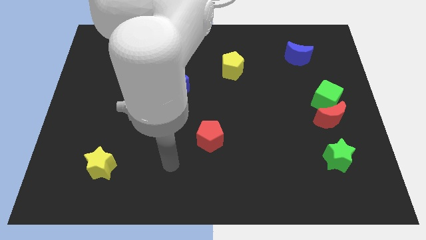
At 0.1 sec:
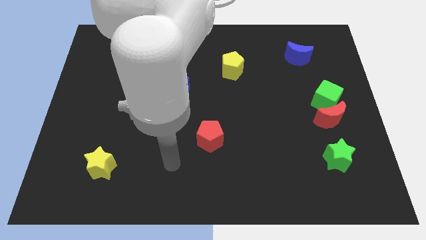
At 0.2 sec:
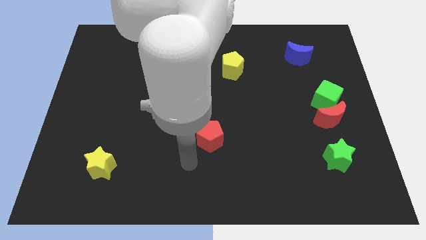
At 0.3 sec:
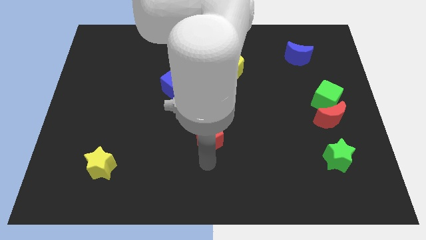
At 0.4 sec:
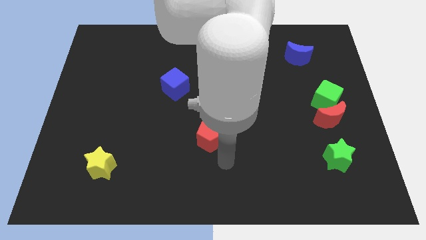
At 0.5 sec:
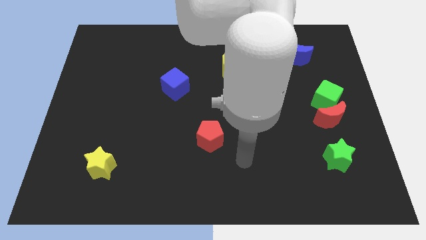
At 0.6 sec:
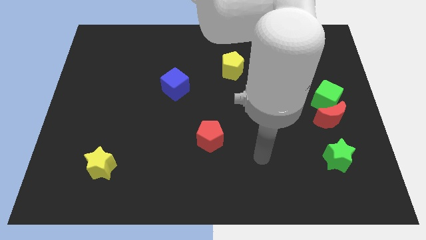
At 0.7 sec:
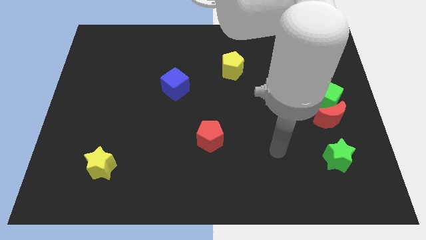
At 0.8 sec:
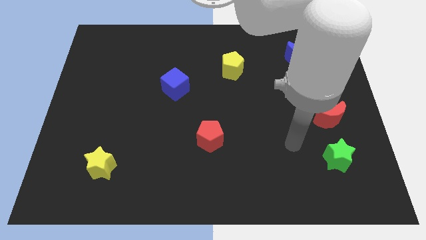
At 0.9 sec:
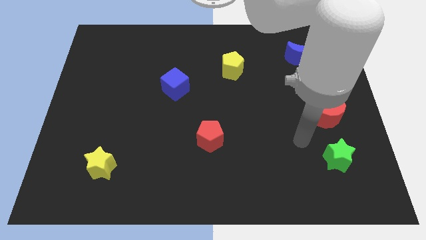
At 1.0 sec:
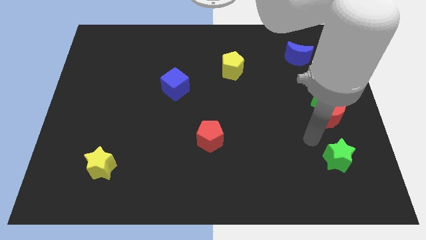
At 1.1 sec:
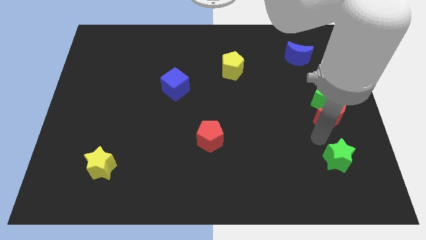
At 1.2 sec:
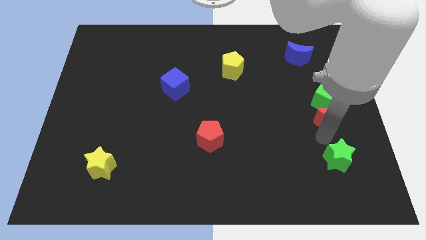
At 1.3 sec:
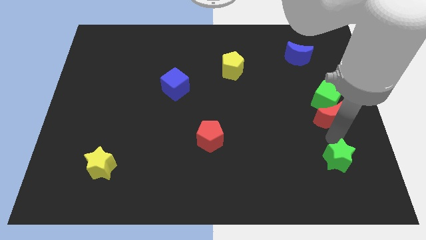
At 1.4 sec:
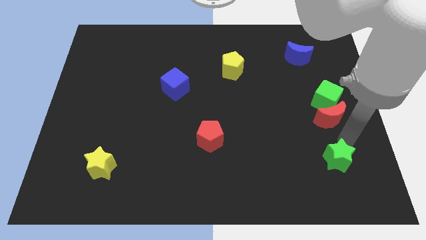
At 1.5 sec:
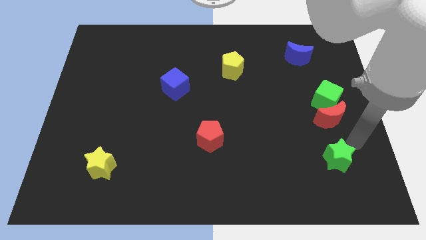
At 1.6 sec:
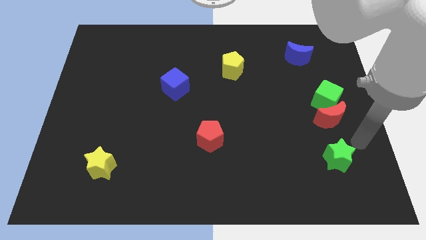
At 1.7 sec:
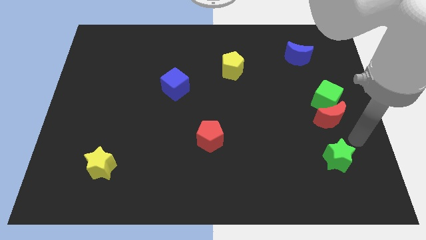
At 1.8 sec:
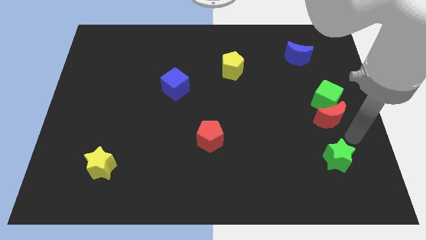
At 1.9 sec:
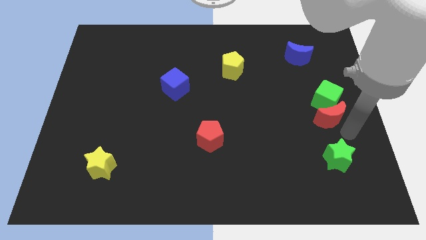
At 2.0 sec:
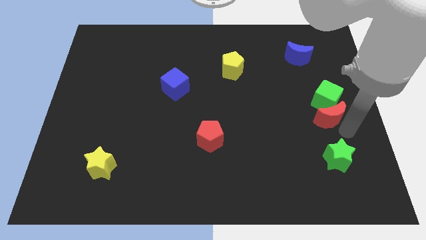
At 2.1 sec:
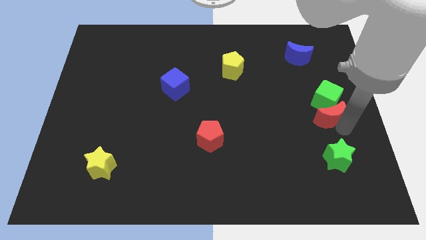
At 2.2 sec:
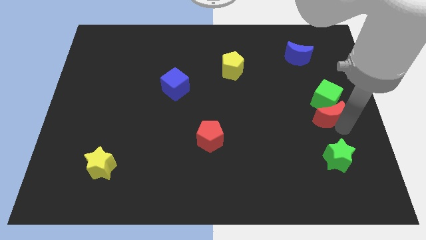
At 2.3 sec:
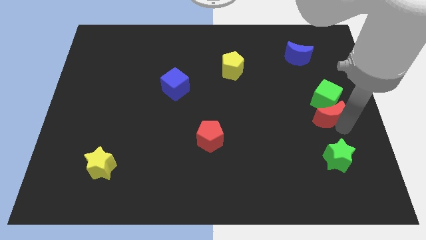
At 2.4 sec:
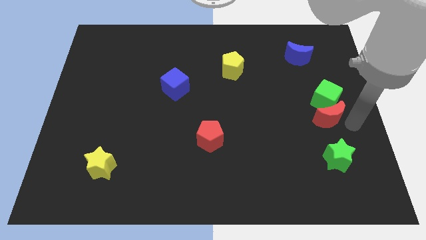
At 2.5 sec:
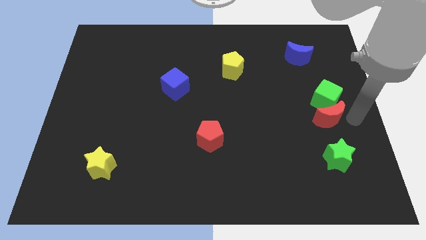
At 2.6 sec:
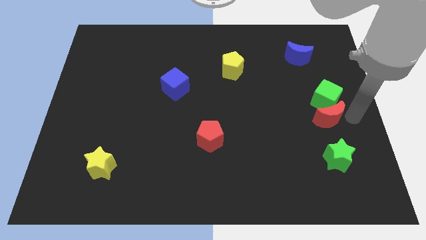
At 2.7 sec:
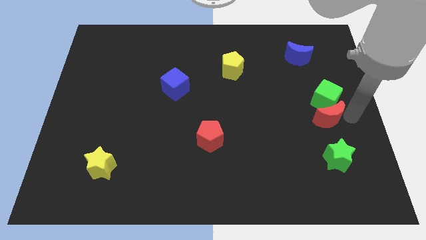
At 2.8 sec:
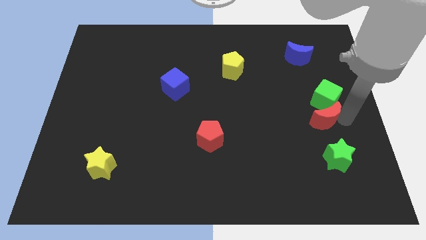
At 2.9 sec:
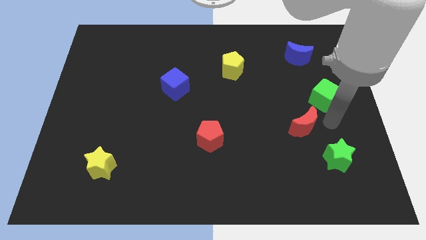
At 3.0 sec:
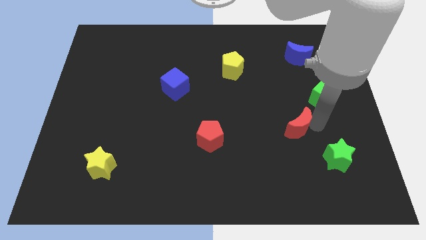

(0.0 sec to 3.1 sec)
go and separate the red crescent from the green cube

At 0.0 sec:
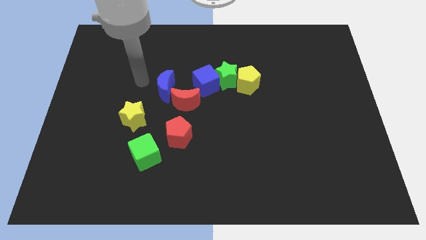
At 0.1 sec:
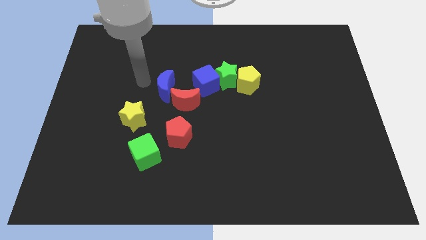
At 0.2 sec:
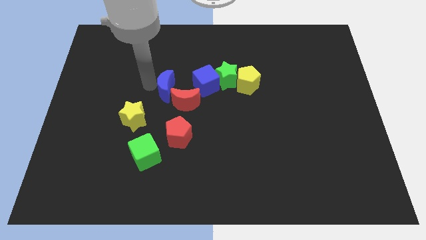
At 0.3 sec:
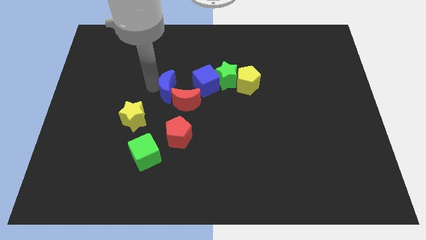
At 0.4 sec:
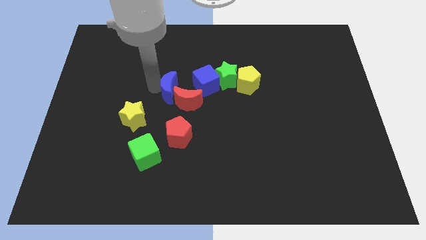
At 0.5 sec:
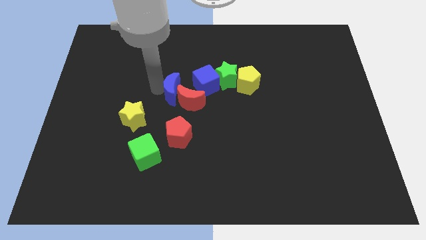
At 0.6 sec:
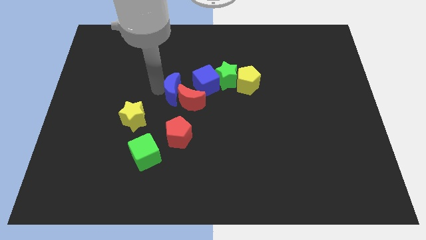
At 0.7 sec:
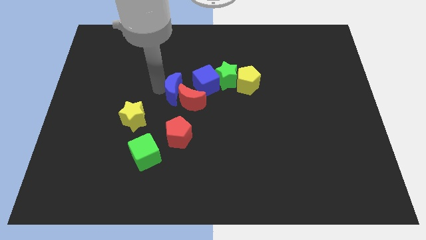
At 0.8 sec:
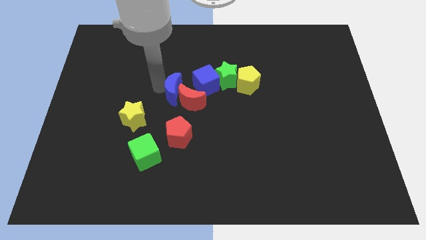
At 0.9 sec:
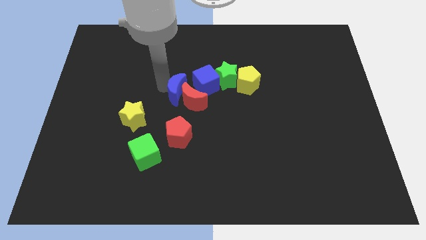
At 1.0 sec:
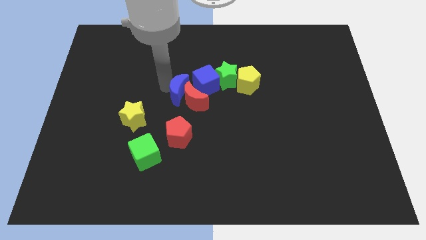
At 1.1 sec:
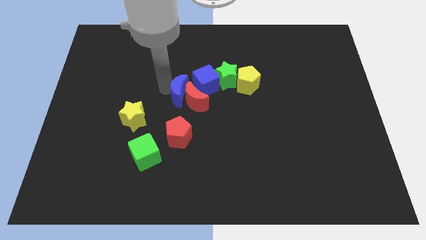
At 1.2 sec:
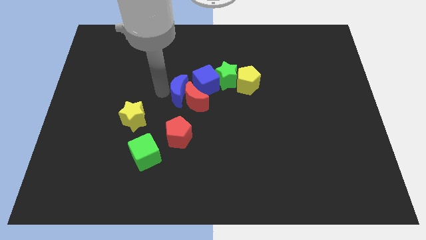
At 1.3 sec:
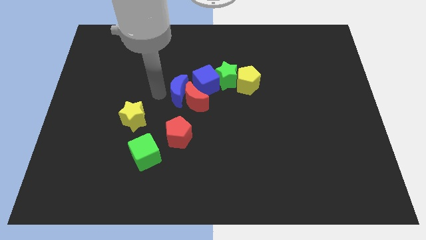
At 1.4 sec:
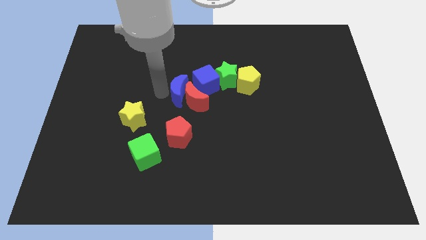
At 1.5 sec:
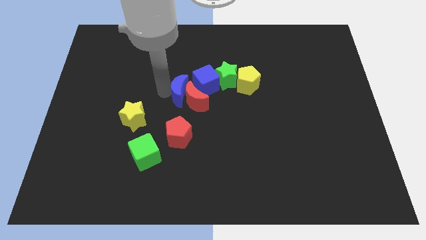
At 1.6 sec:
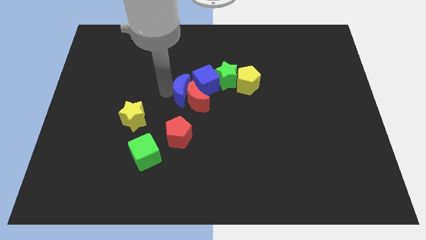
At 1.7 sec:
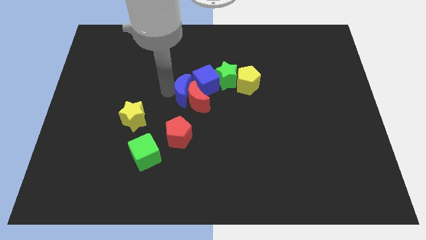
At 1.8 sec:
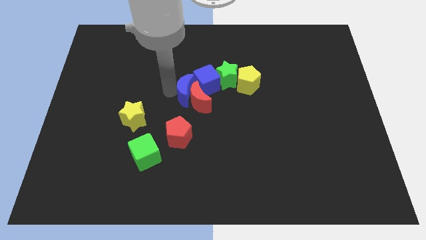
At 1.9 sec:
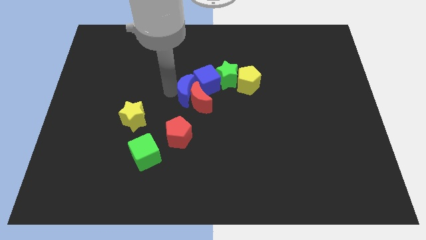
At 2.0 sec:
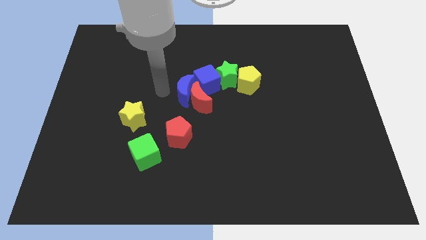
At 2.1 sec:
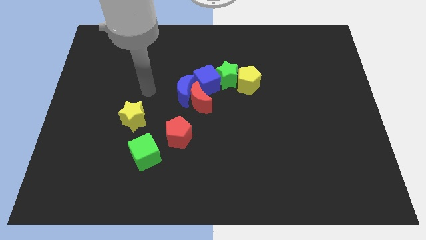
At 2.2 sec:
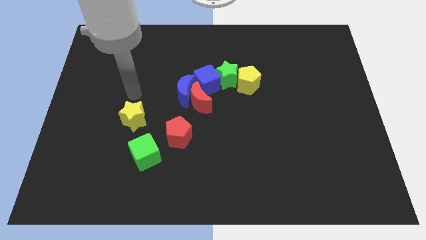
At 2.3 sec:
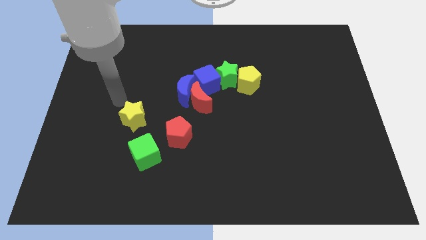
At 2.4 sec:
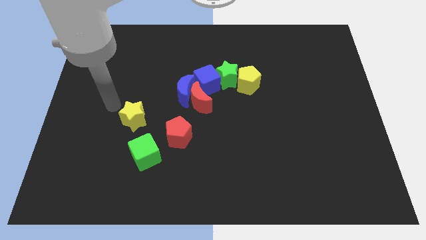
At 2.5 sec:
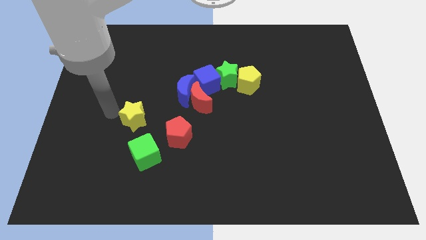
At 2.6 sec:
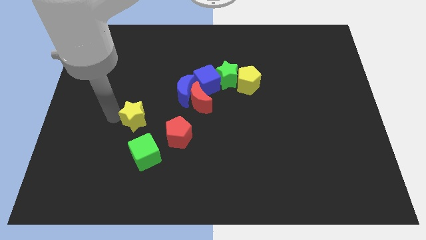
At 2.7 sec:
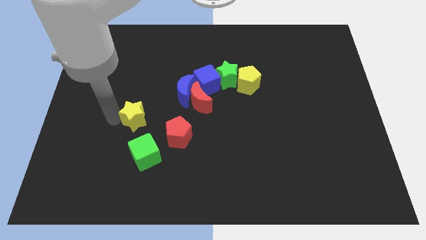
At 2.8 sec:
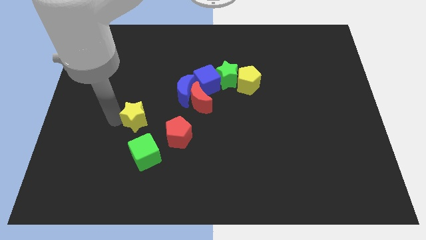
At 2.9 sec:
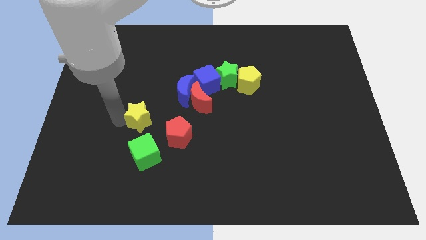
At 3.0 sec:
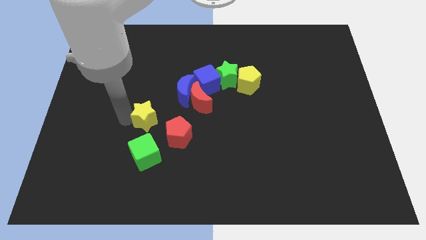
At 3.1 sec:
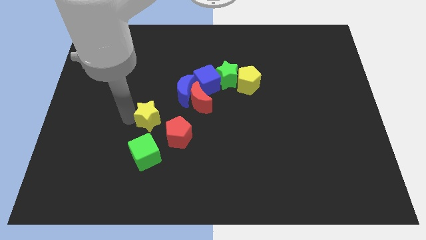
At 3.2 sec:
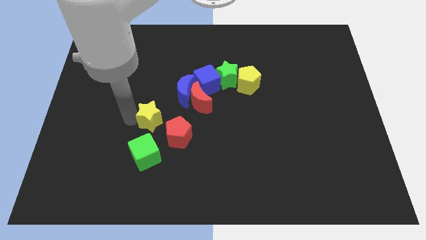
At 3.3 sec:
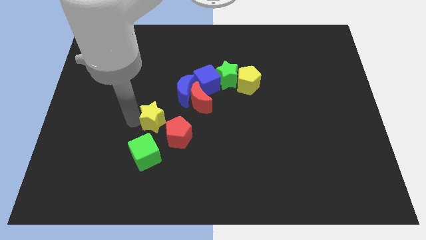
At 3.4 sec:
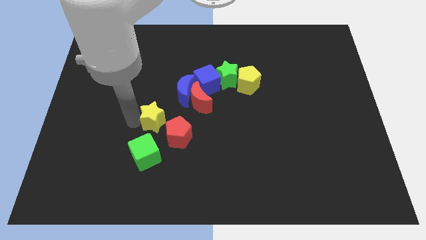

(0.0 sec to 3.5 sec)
move the yellow star above the green cube

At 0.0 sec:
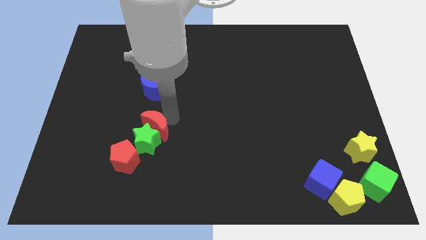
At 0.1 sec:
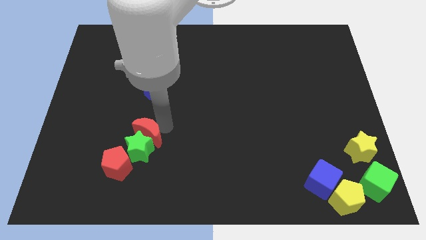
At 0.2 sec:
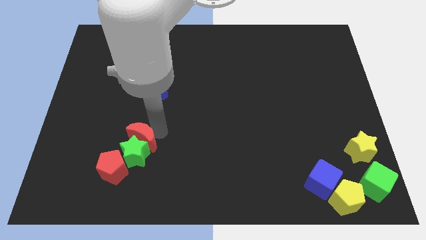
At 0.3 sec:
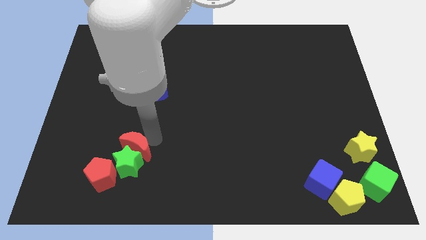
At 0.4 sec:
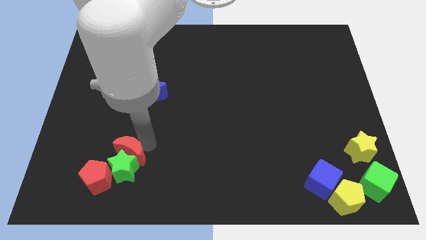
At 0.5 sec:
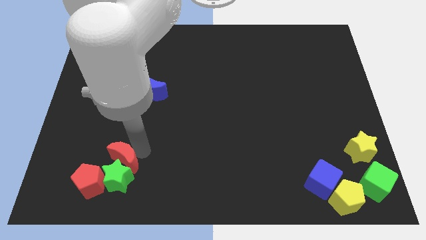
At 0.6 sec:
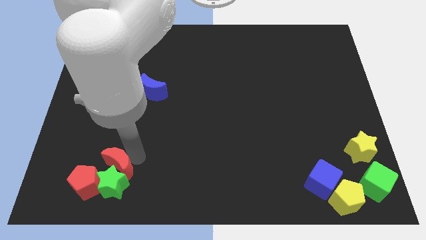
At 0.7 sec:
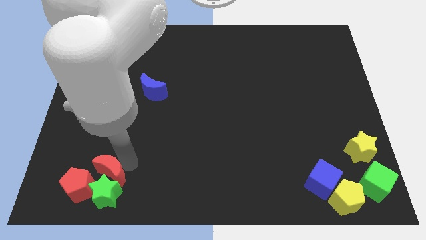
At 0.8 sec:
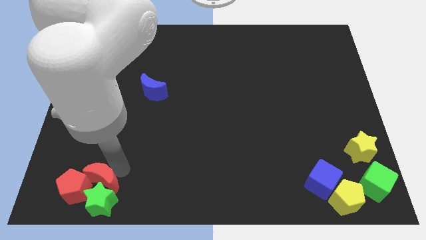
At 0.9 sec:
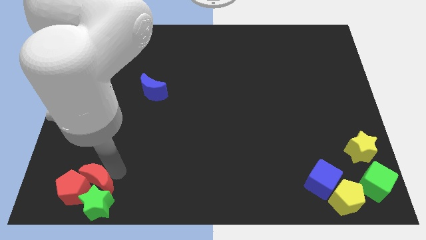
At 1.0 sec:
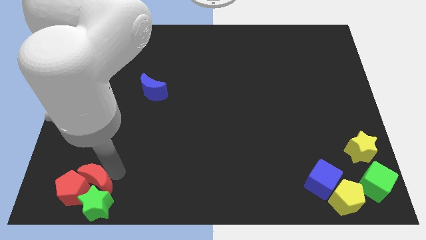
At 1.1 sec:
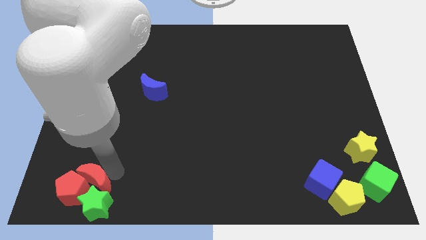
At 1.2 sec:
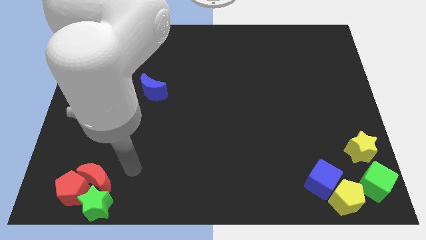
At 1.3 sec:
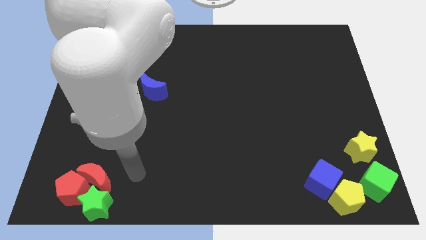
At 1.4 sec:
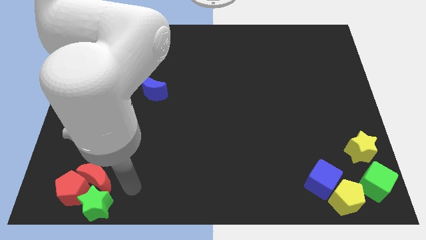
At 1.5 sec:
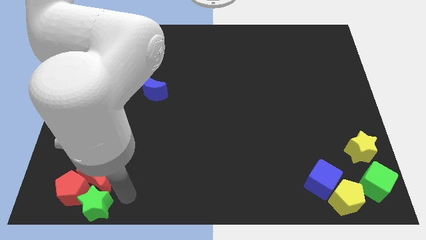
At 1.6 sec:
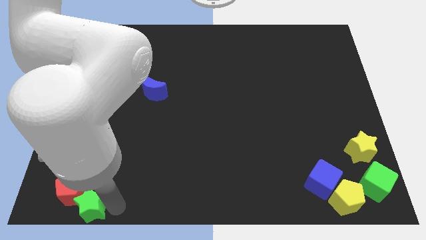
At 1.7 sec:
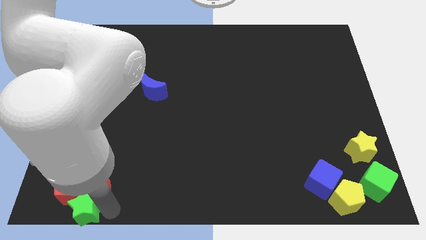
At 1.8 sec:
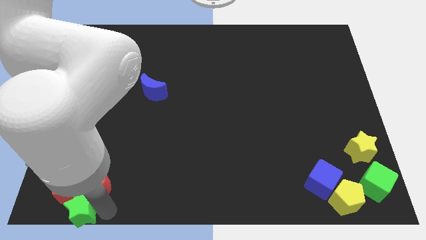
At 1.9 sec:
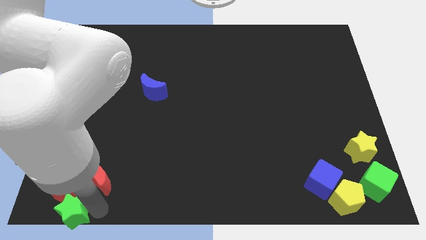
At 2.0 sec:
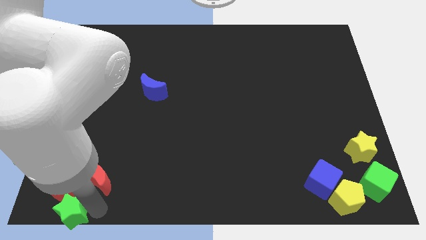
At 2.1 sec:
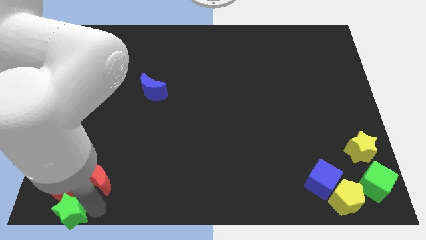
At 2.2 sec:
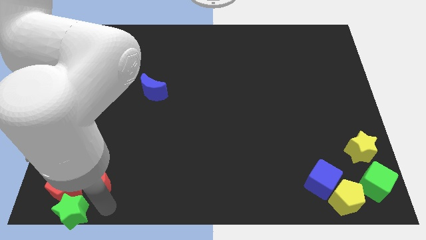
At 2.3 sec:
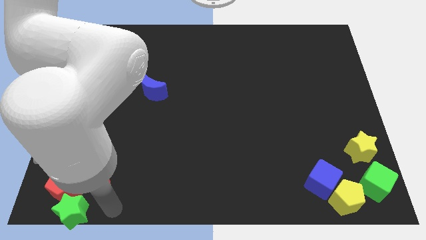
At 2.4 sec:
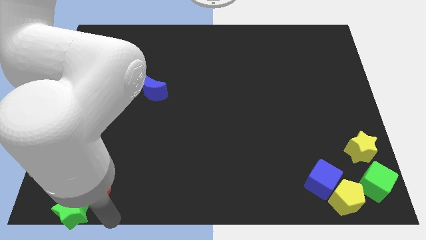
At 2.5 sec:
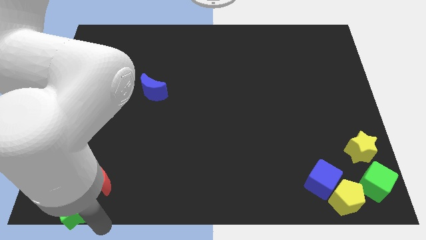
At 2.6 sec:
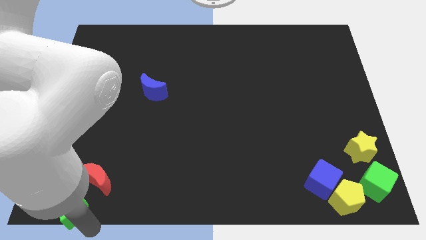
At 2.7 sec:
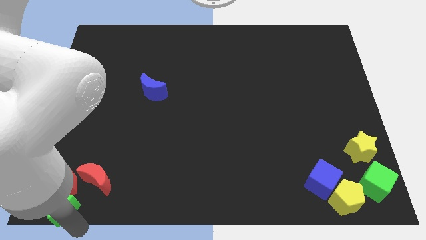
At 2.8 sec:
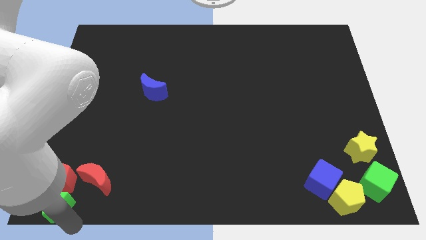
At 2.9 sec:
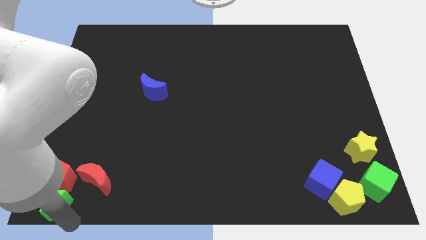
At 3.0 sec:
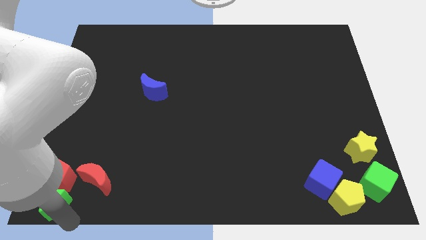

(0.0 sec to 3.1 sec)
push green star below red pentagon
